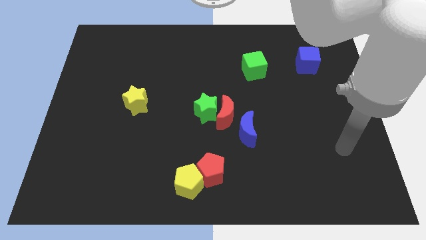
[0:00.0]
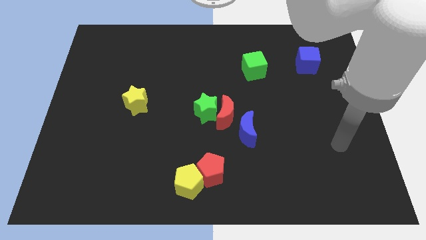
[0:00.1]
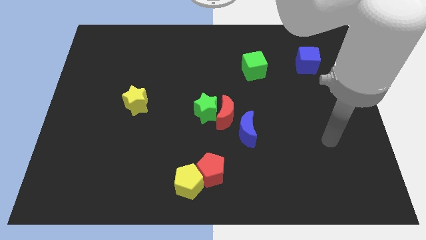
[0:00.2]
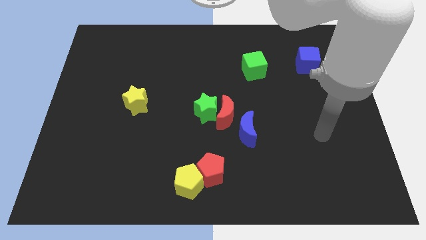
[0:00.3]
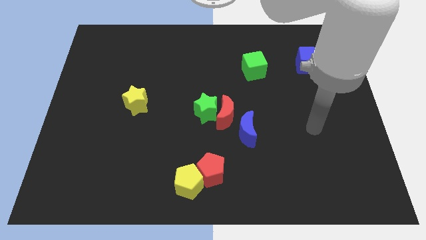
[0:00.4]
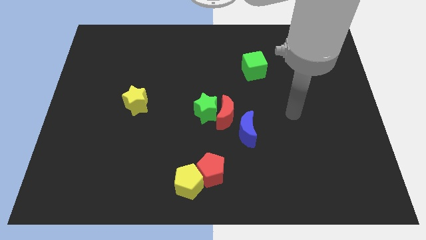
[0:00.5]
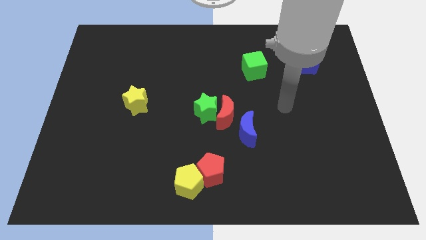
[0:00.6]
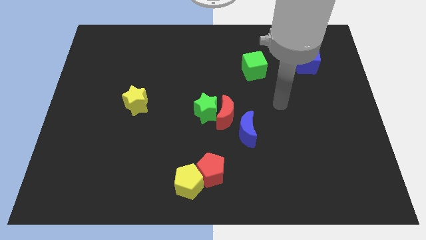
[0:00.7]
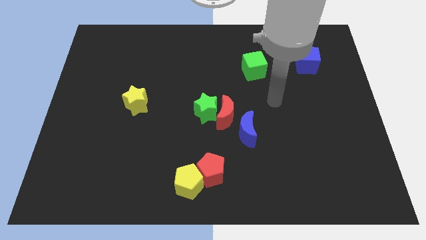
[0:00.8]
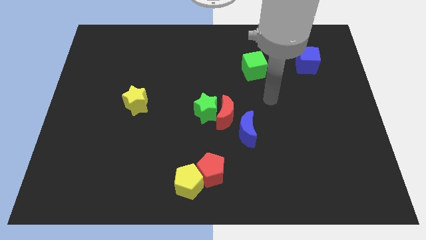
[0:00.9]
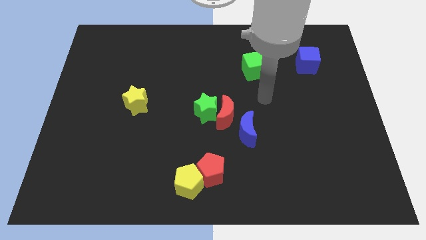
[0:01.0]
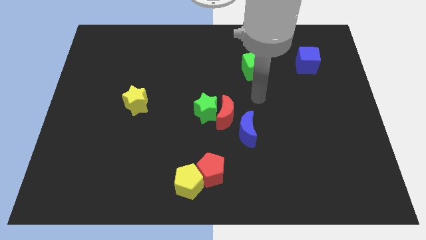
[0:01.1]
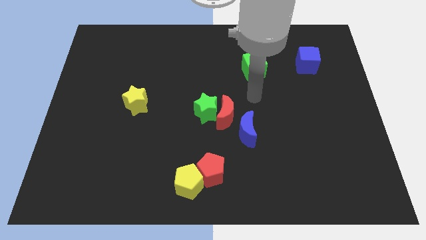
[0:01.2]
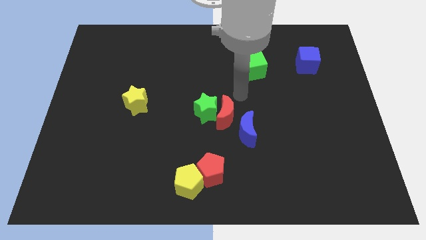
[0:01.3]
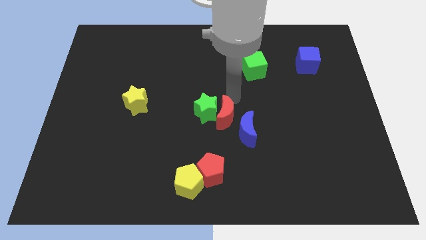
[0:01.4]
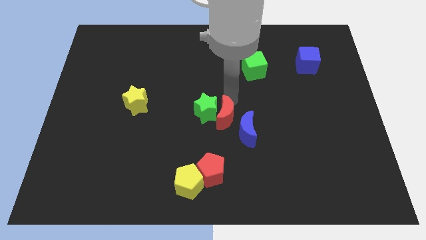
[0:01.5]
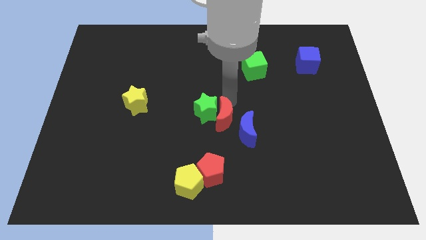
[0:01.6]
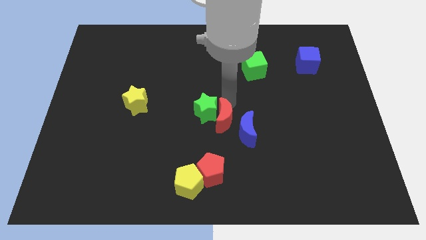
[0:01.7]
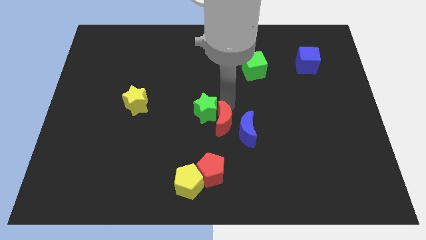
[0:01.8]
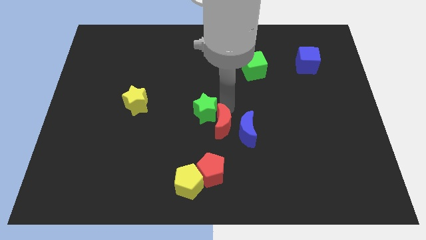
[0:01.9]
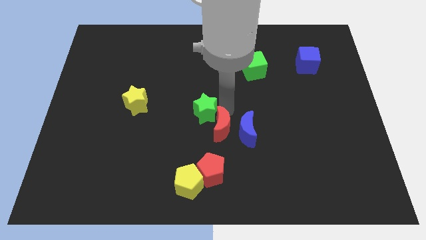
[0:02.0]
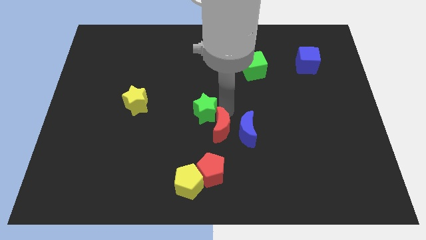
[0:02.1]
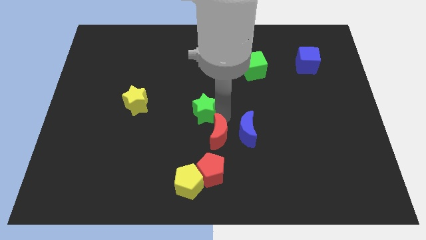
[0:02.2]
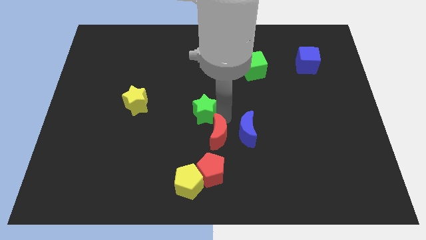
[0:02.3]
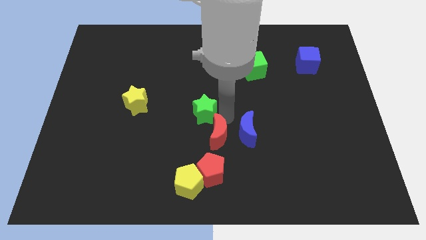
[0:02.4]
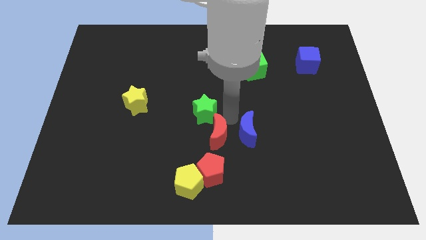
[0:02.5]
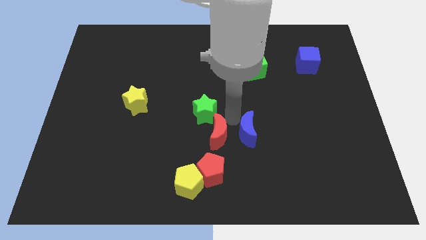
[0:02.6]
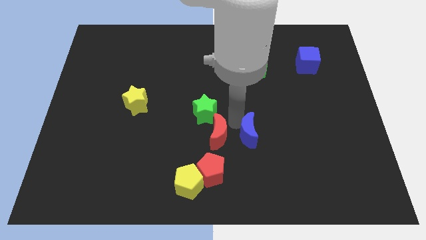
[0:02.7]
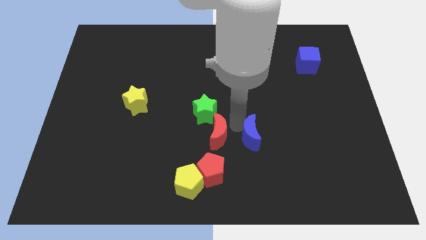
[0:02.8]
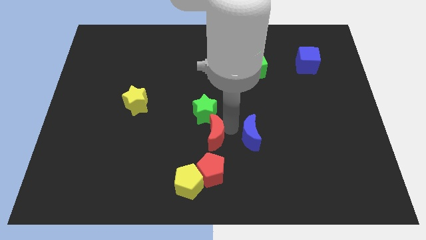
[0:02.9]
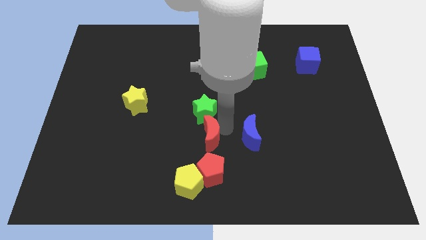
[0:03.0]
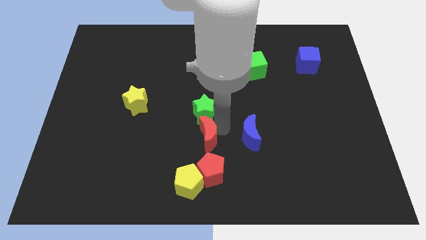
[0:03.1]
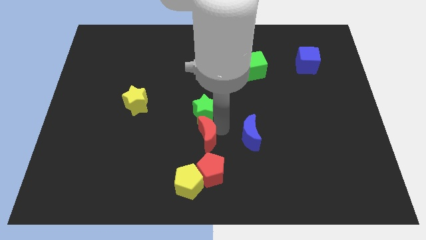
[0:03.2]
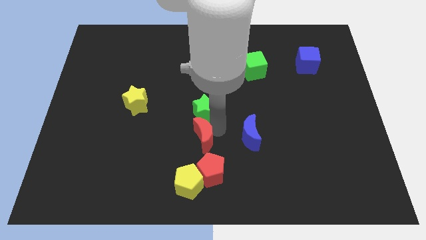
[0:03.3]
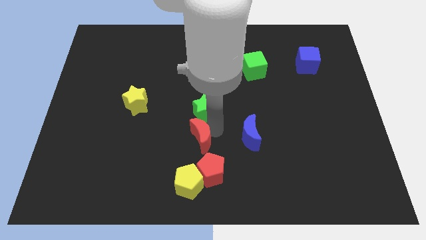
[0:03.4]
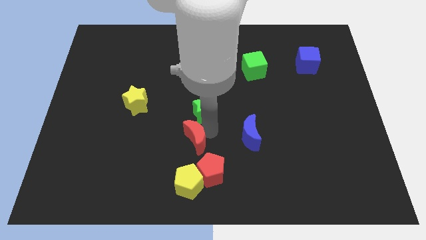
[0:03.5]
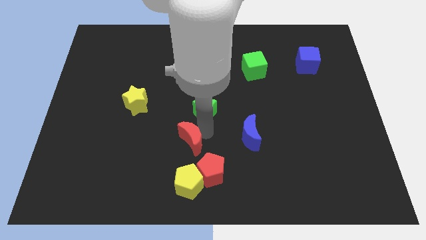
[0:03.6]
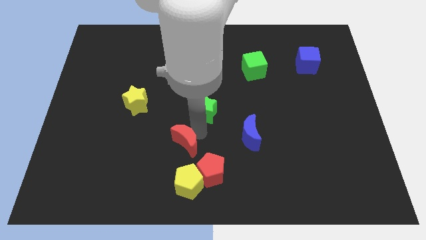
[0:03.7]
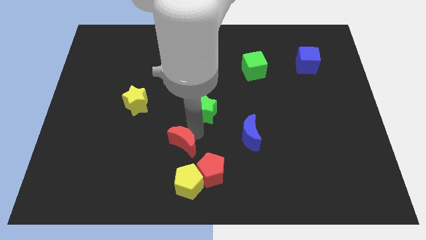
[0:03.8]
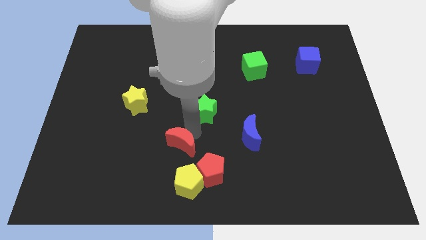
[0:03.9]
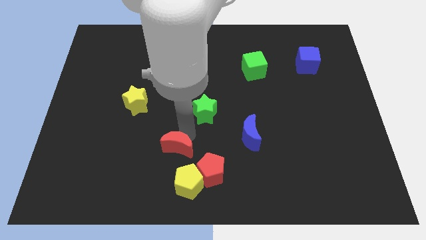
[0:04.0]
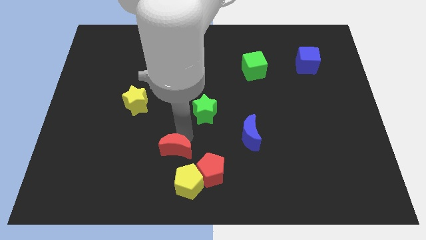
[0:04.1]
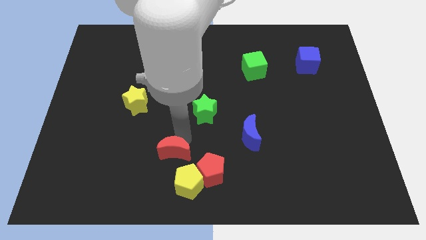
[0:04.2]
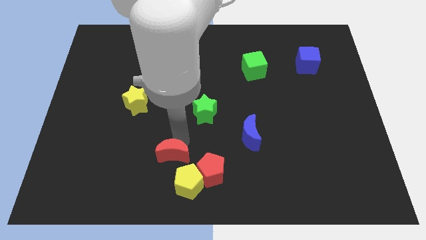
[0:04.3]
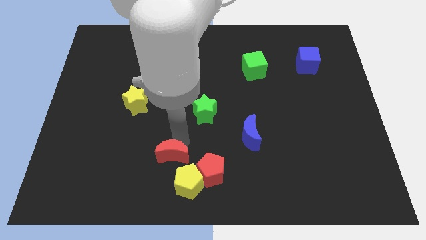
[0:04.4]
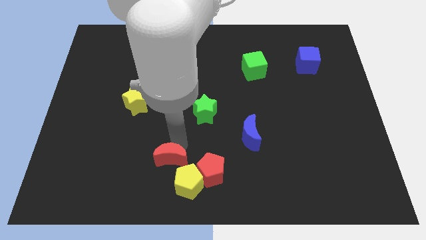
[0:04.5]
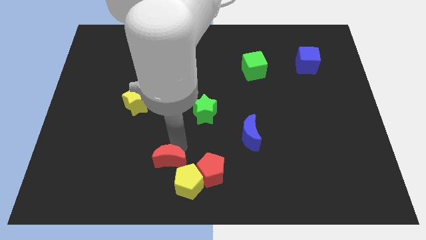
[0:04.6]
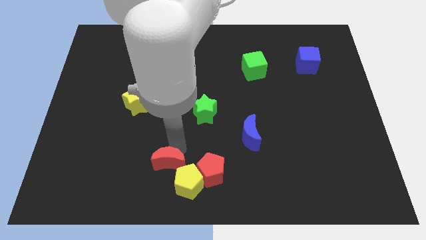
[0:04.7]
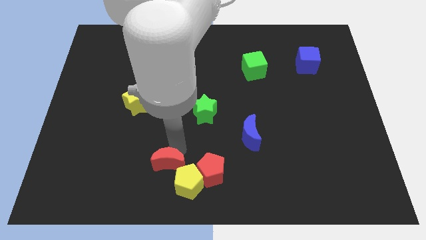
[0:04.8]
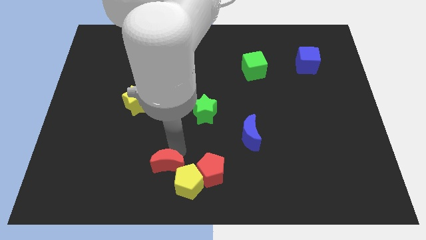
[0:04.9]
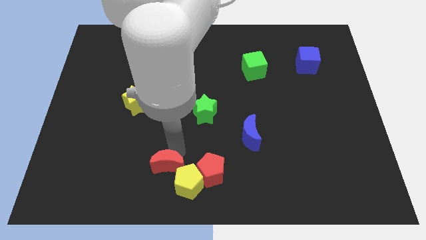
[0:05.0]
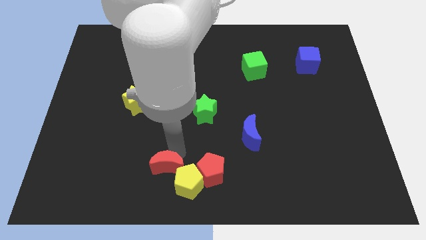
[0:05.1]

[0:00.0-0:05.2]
move the red moon close to the yellow pentagon

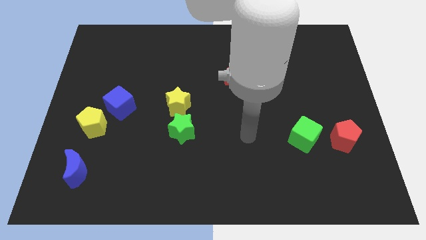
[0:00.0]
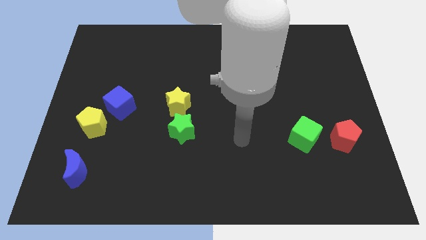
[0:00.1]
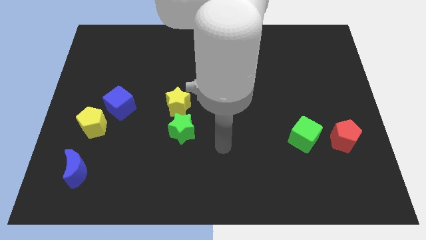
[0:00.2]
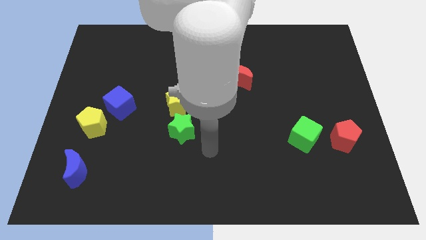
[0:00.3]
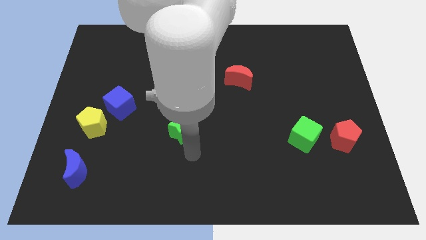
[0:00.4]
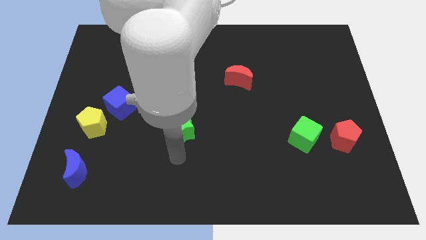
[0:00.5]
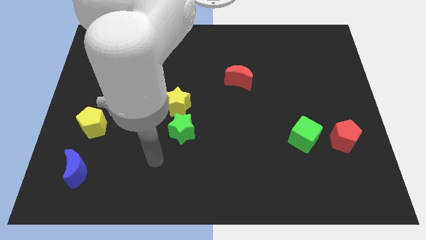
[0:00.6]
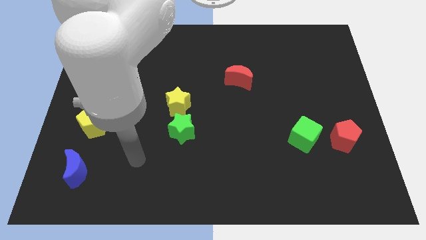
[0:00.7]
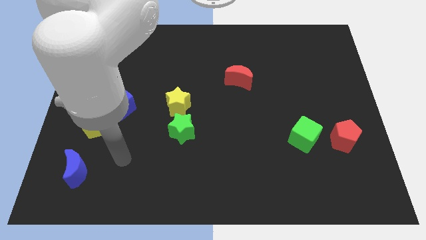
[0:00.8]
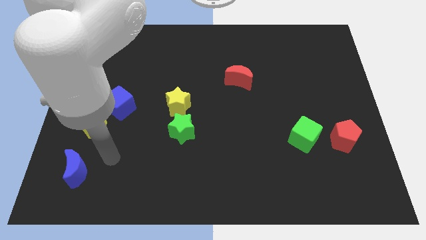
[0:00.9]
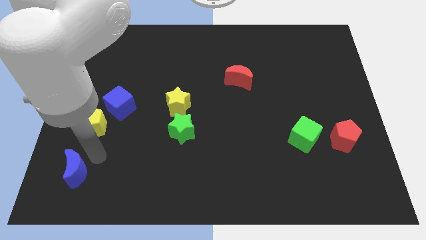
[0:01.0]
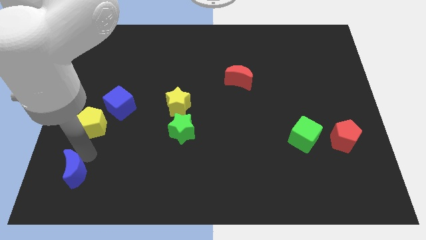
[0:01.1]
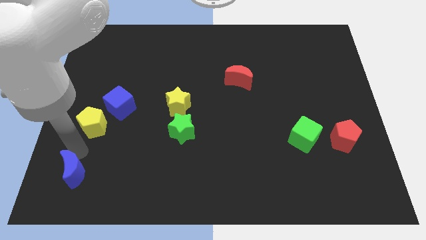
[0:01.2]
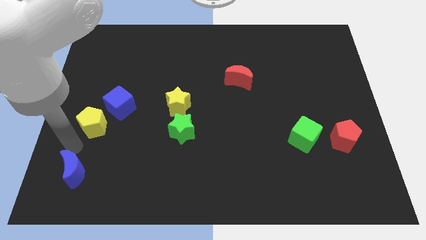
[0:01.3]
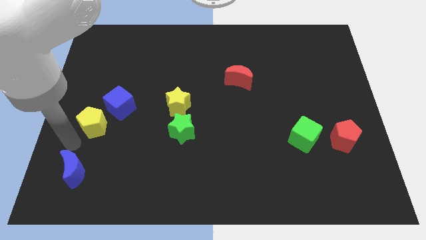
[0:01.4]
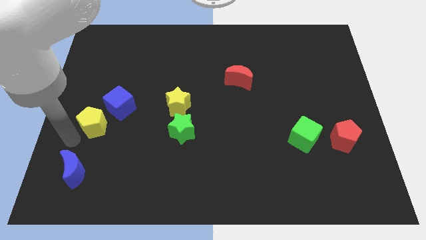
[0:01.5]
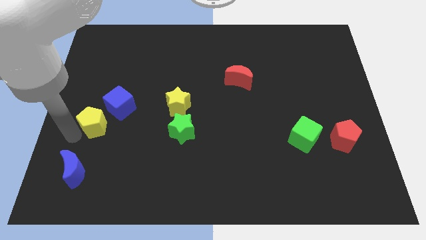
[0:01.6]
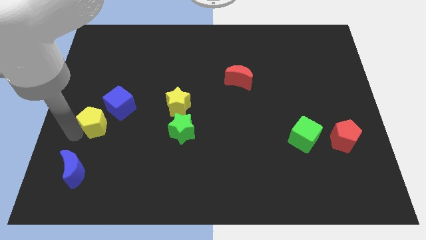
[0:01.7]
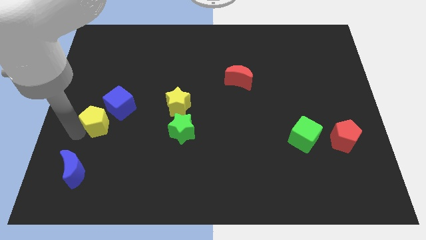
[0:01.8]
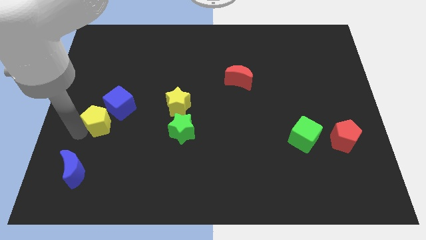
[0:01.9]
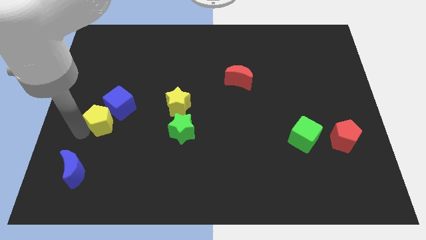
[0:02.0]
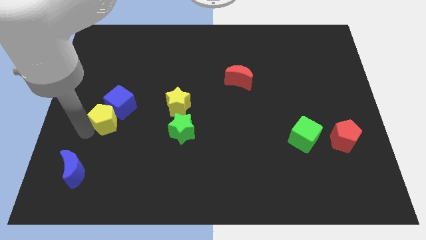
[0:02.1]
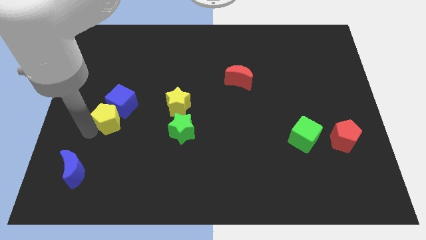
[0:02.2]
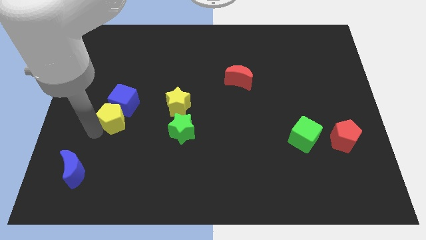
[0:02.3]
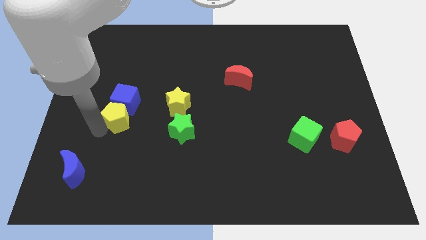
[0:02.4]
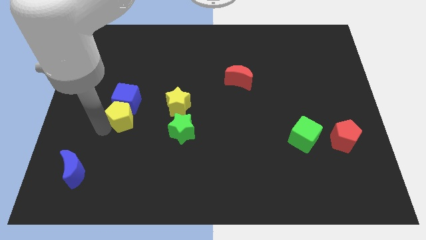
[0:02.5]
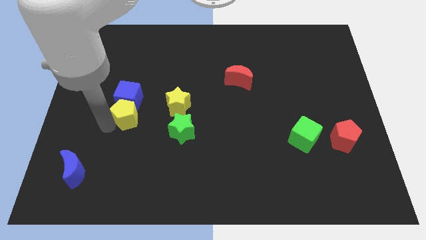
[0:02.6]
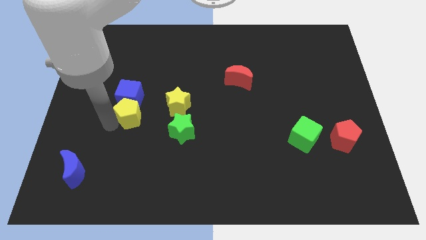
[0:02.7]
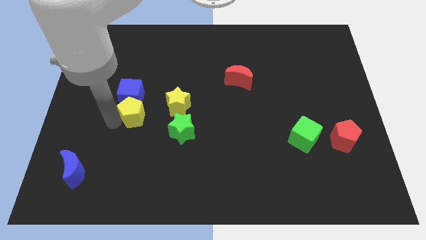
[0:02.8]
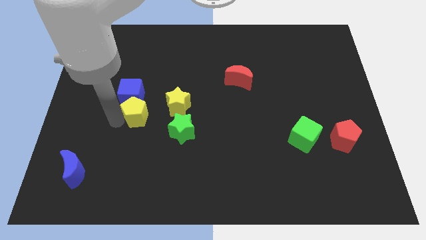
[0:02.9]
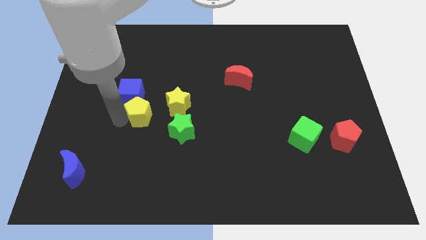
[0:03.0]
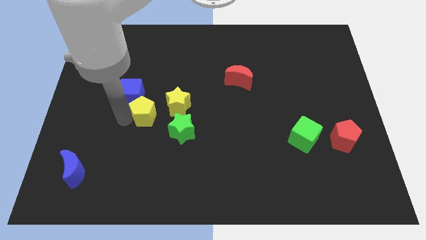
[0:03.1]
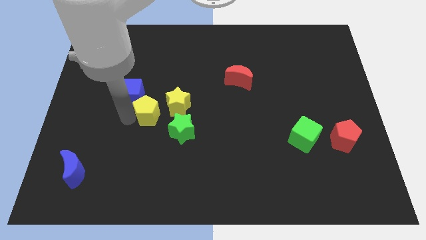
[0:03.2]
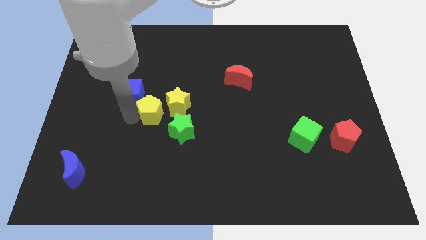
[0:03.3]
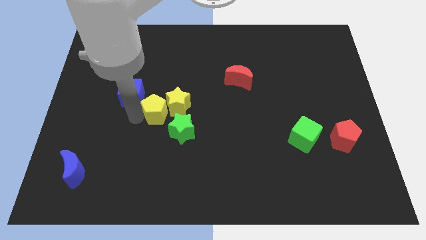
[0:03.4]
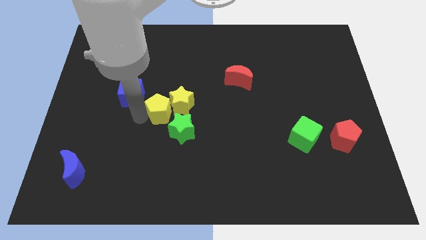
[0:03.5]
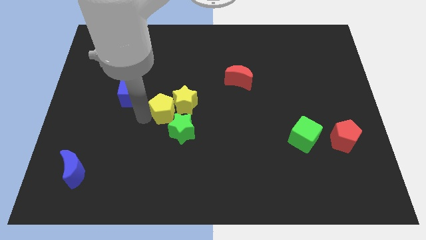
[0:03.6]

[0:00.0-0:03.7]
push the yellow pentagon close to the yellow star
